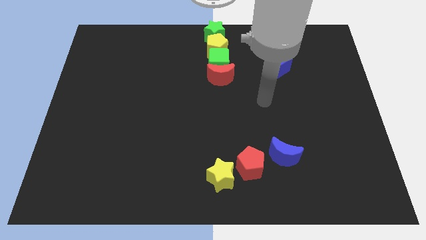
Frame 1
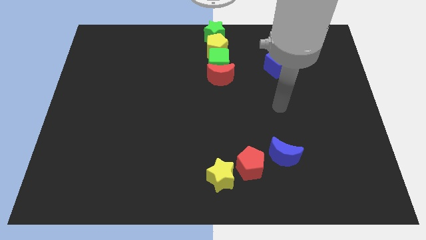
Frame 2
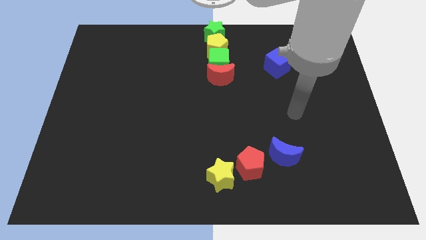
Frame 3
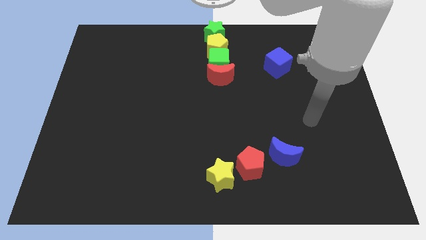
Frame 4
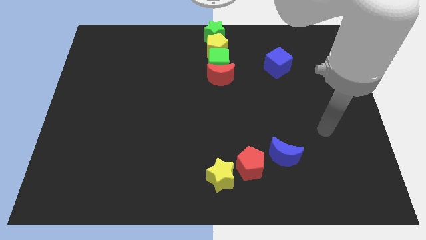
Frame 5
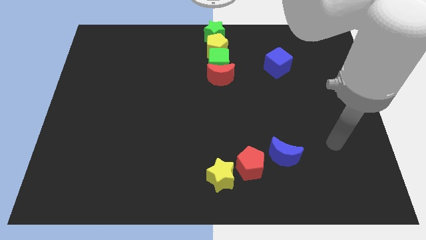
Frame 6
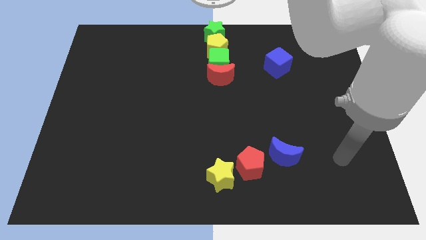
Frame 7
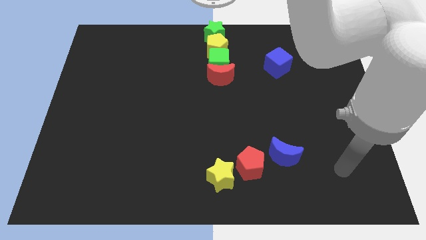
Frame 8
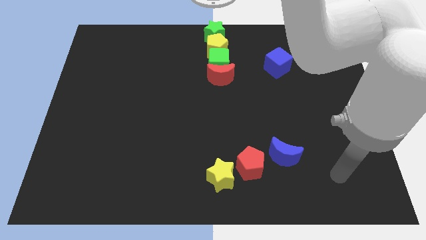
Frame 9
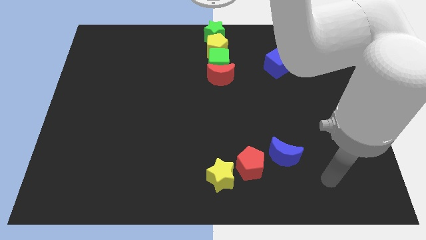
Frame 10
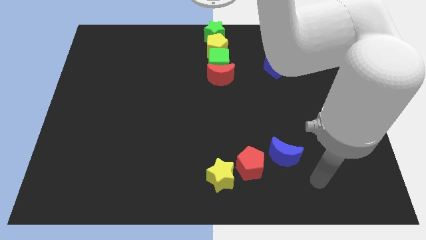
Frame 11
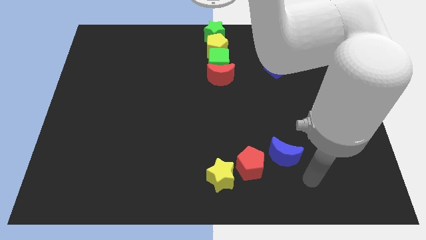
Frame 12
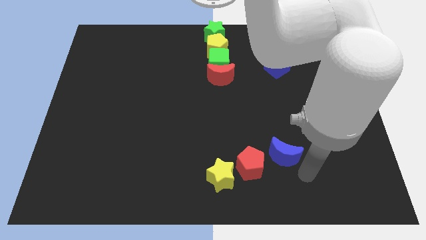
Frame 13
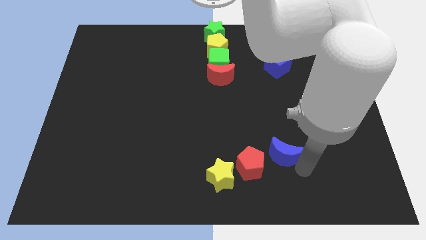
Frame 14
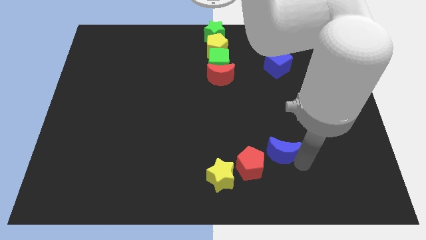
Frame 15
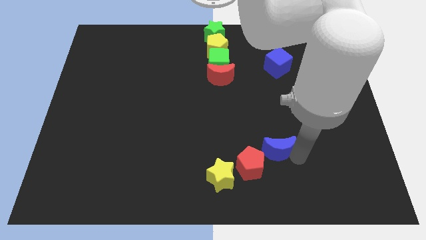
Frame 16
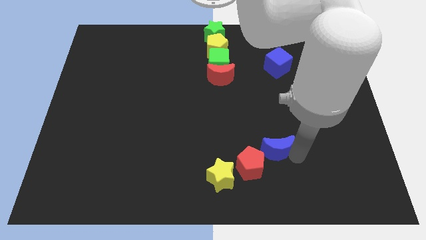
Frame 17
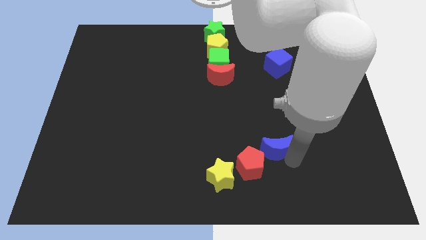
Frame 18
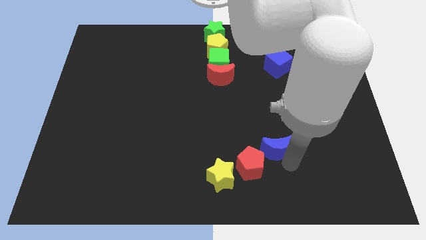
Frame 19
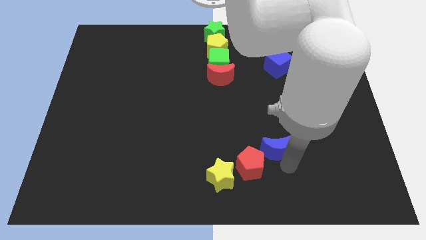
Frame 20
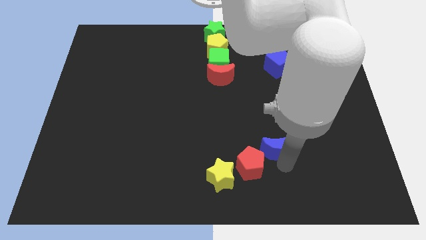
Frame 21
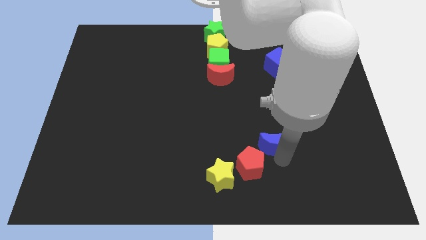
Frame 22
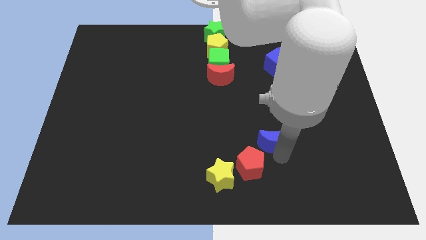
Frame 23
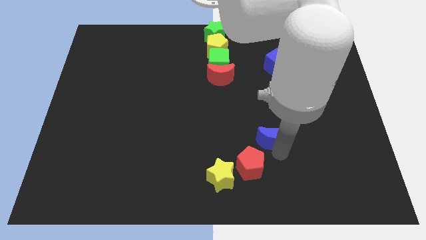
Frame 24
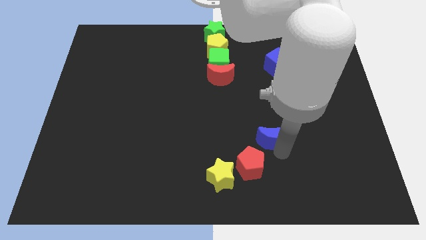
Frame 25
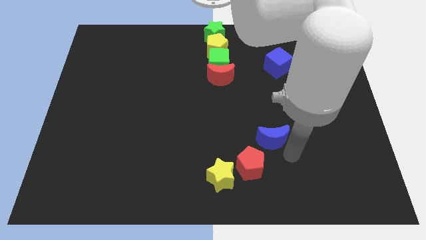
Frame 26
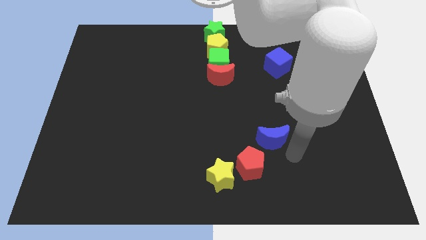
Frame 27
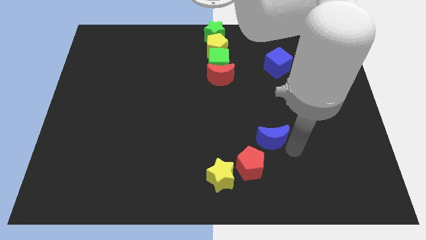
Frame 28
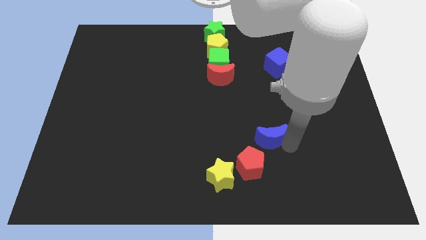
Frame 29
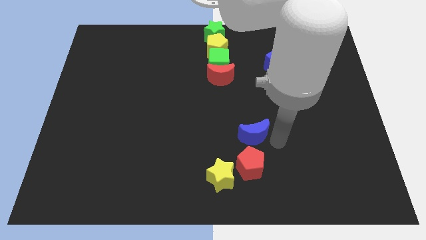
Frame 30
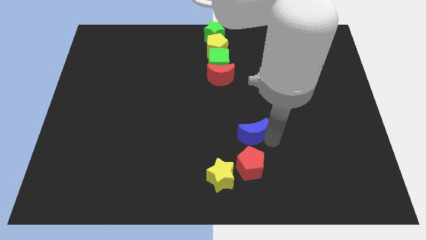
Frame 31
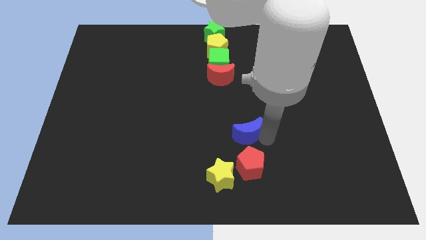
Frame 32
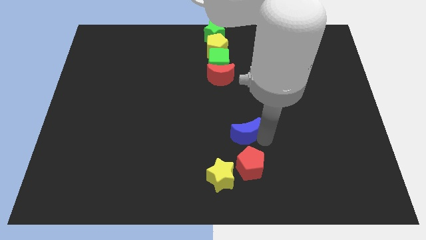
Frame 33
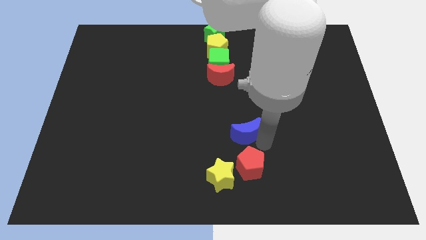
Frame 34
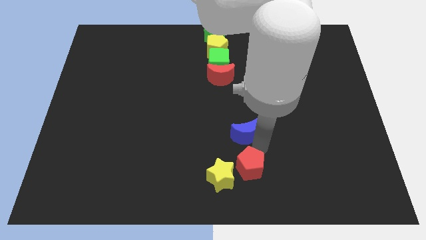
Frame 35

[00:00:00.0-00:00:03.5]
push the blue moon above the red pentagon

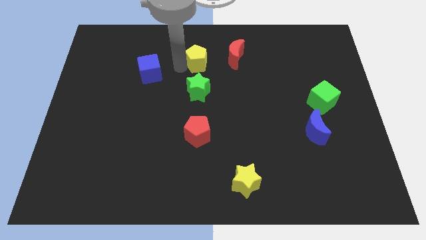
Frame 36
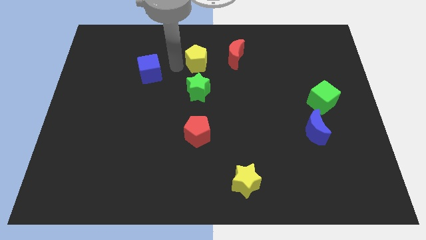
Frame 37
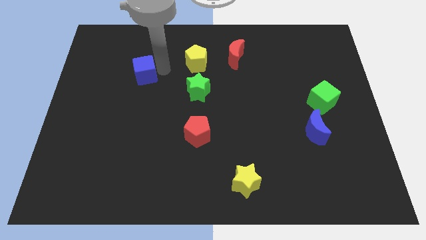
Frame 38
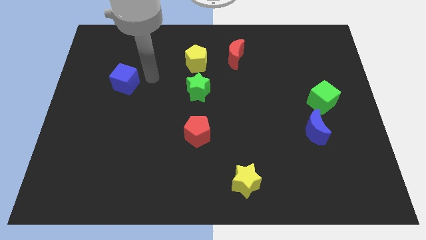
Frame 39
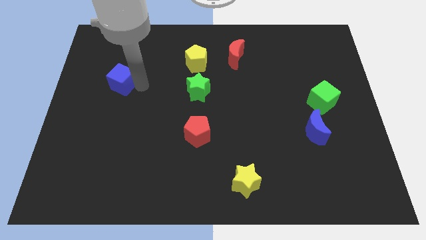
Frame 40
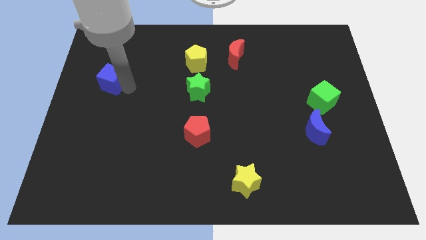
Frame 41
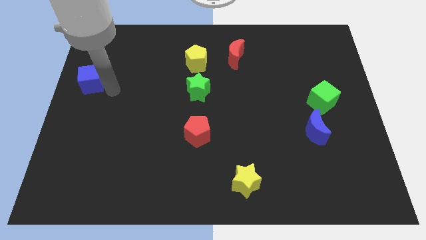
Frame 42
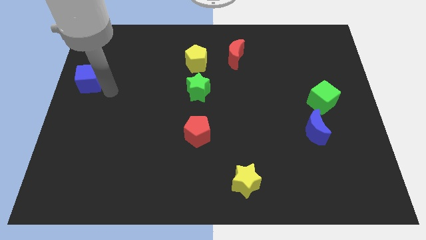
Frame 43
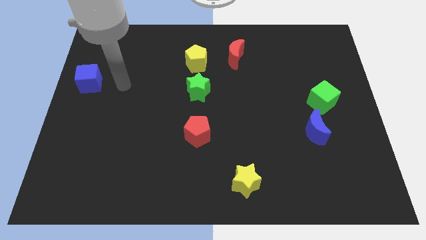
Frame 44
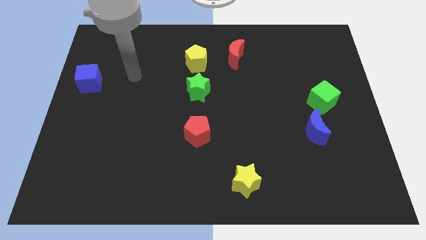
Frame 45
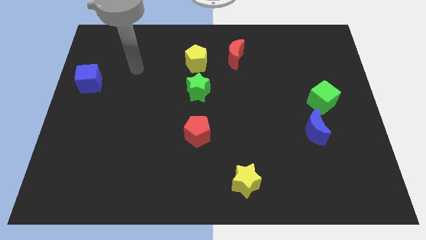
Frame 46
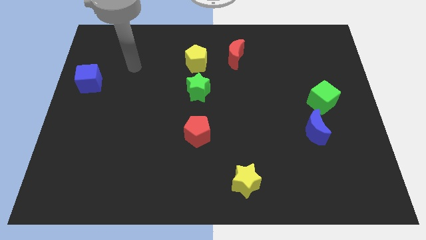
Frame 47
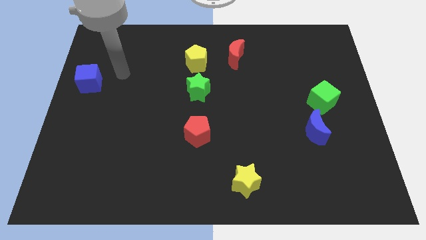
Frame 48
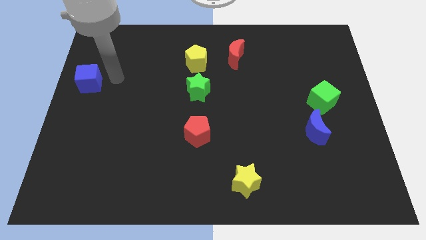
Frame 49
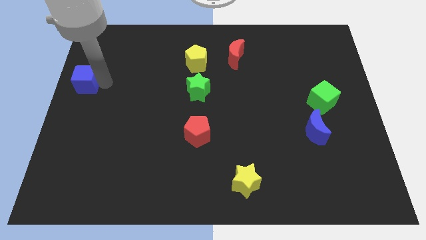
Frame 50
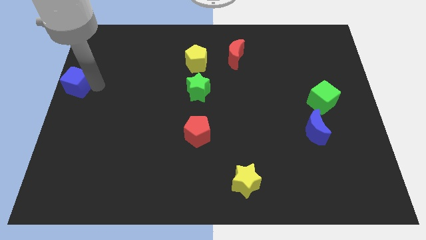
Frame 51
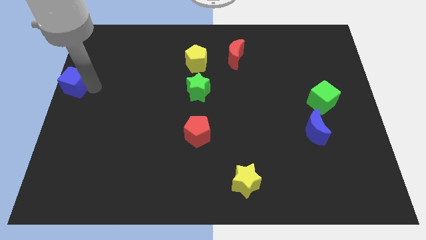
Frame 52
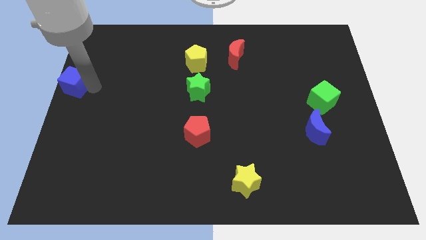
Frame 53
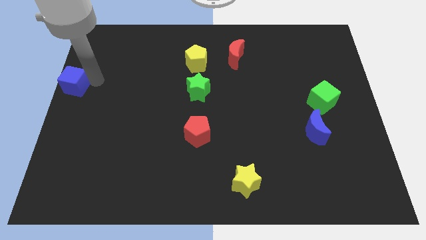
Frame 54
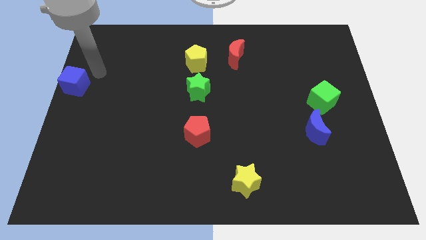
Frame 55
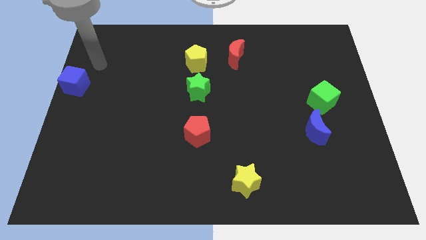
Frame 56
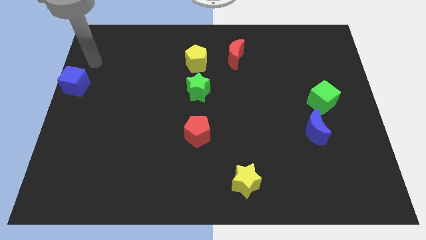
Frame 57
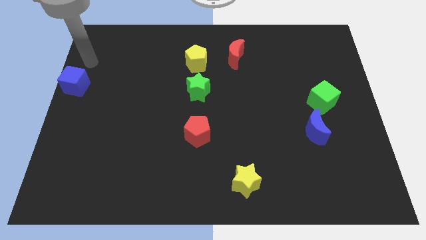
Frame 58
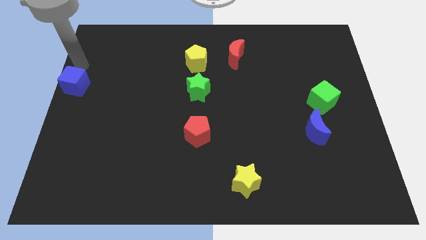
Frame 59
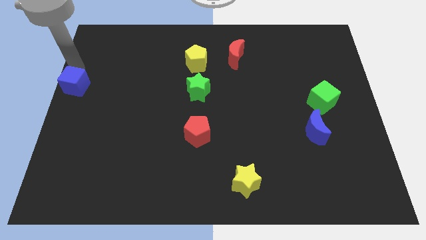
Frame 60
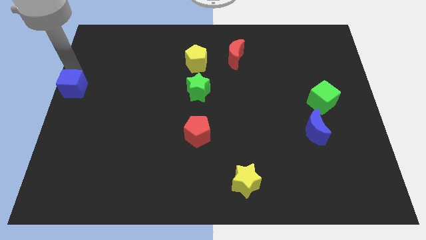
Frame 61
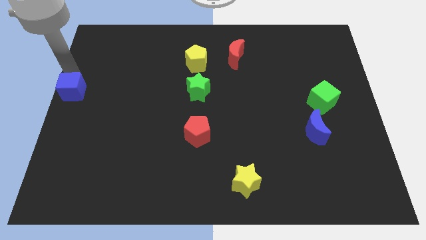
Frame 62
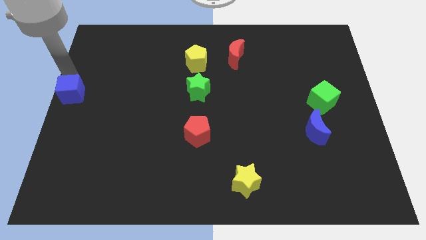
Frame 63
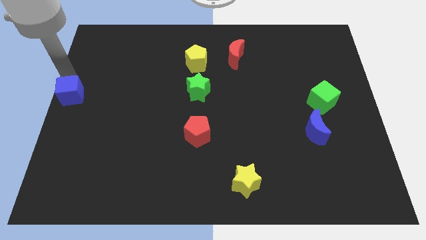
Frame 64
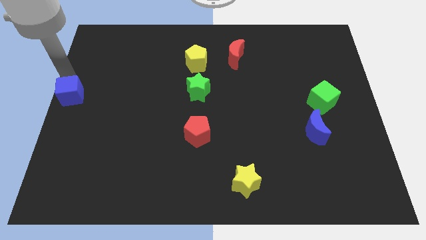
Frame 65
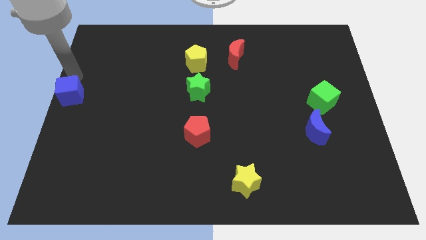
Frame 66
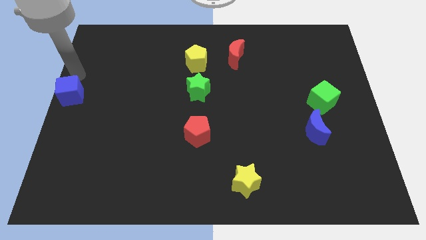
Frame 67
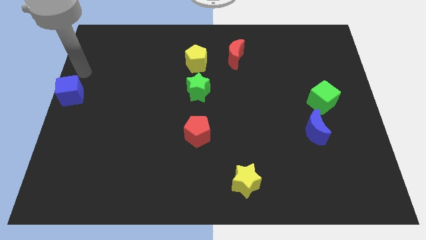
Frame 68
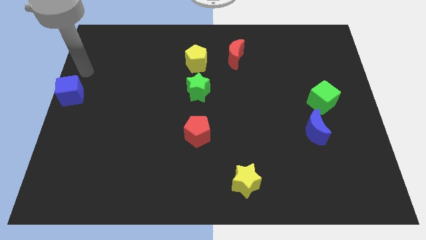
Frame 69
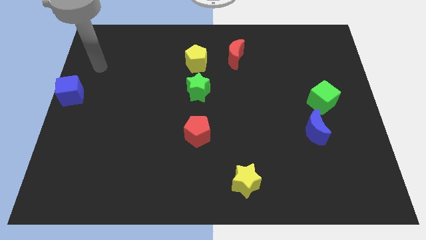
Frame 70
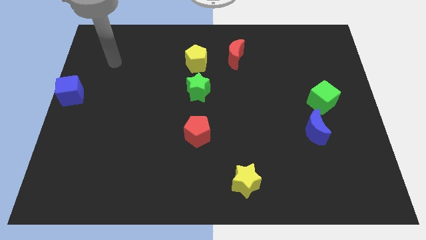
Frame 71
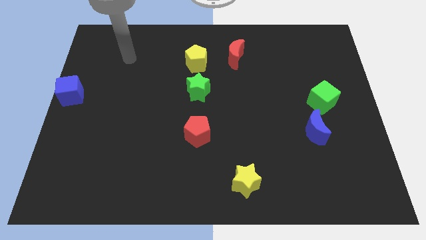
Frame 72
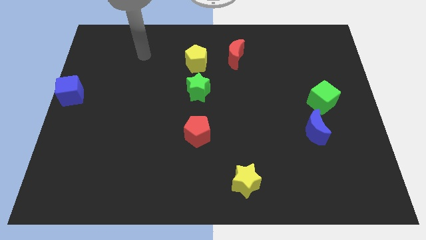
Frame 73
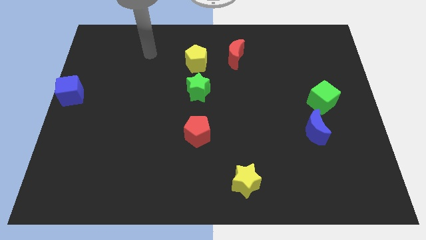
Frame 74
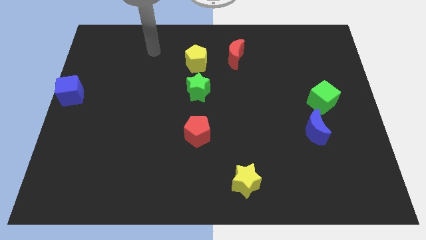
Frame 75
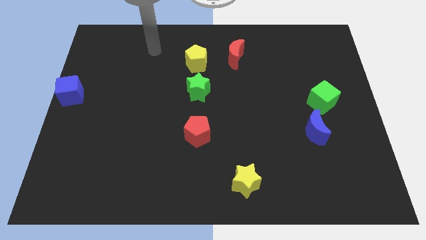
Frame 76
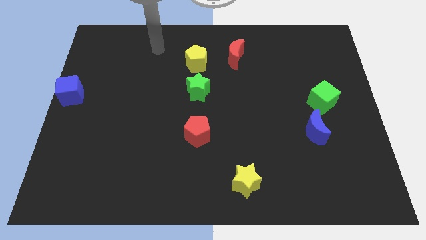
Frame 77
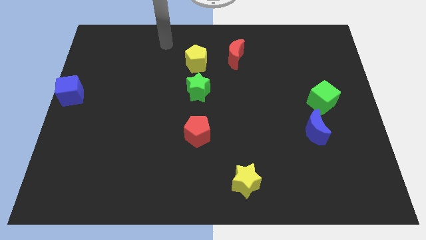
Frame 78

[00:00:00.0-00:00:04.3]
place the blue cube towards the center left side of the board

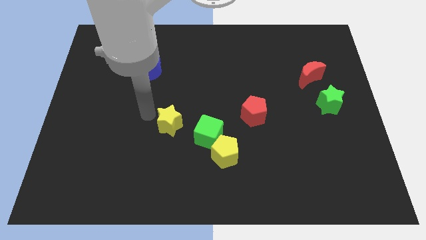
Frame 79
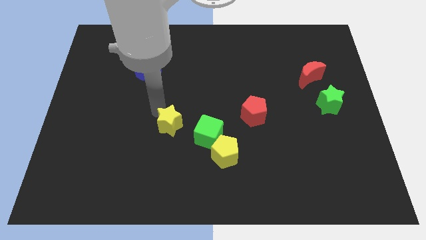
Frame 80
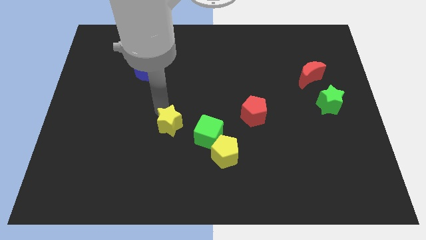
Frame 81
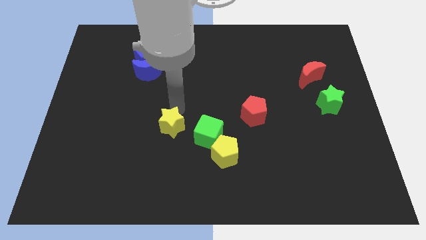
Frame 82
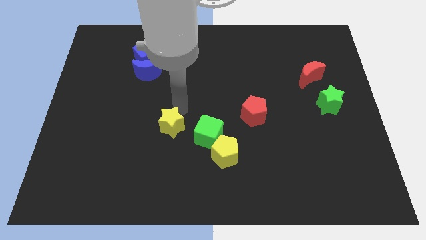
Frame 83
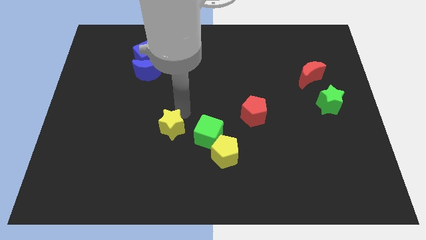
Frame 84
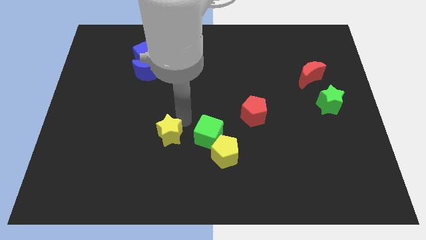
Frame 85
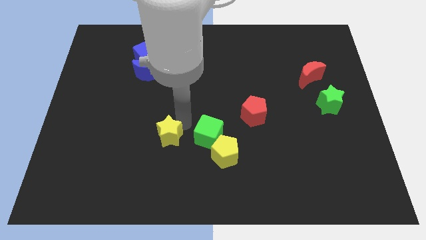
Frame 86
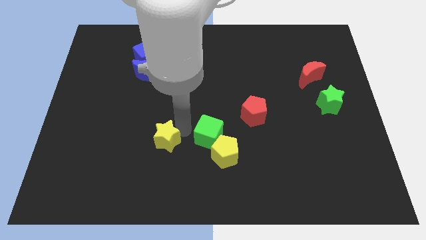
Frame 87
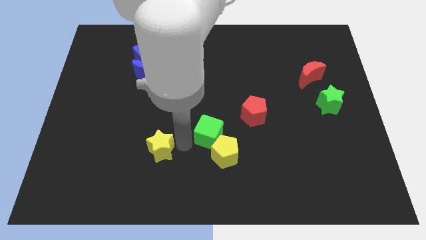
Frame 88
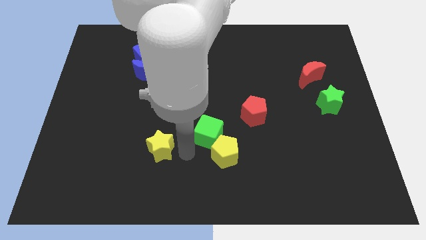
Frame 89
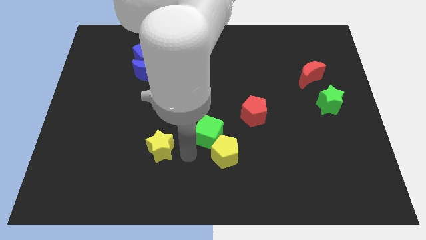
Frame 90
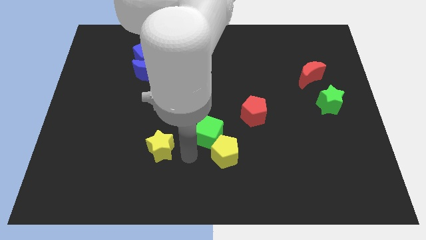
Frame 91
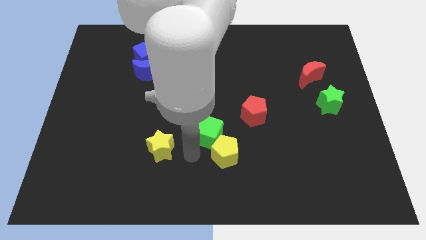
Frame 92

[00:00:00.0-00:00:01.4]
place the arm diagonal to the green cube
